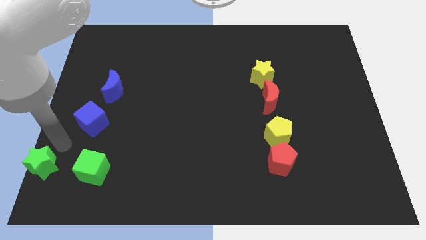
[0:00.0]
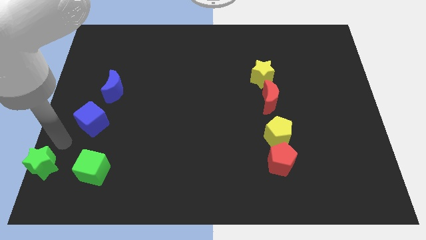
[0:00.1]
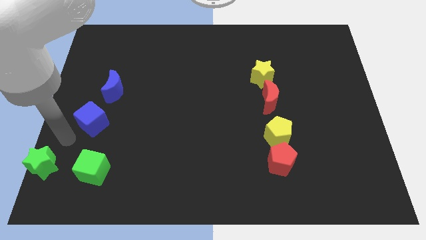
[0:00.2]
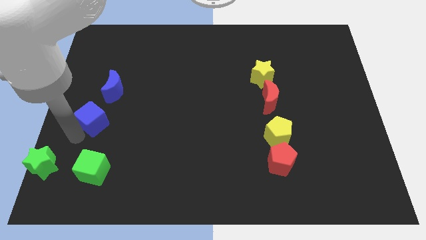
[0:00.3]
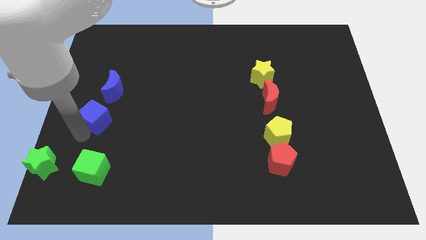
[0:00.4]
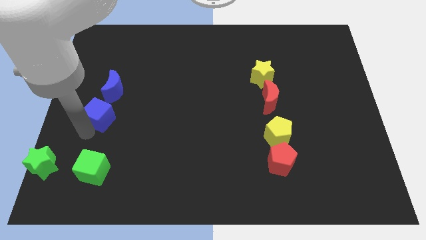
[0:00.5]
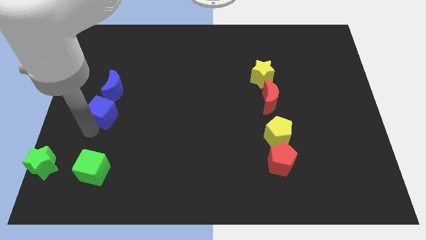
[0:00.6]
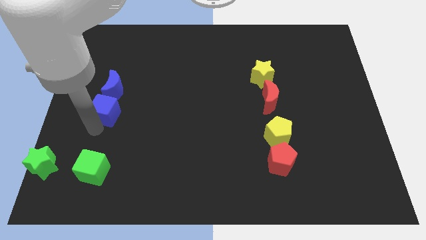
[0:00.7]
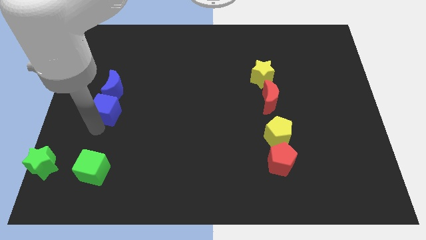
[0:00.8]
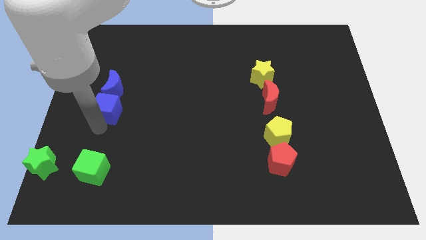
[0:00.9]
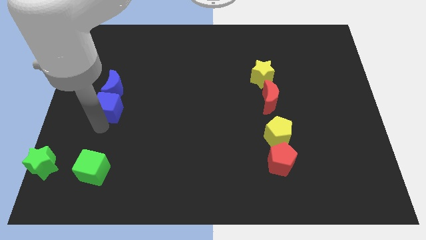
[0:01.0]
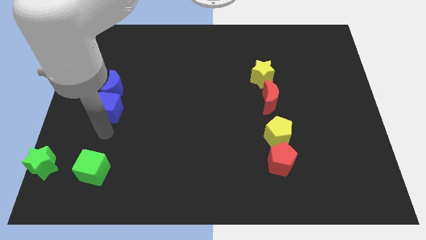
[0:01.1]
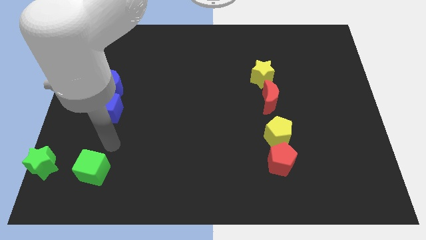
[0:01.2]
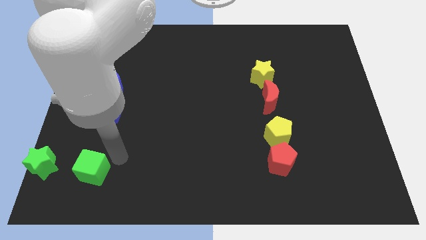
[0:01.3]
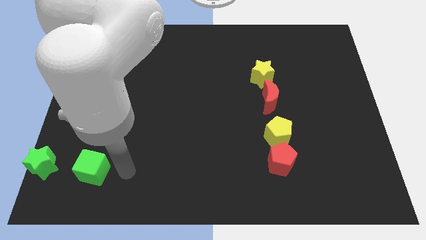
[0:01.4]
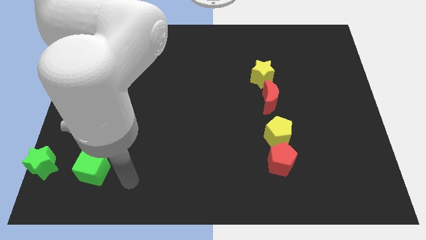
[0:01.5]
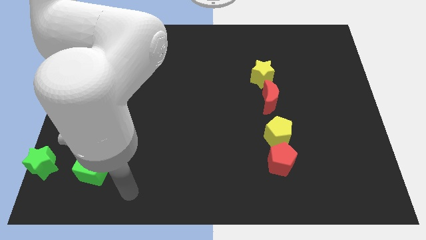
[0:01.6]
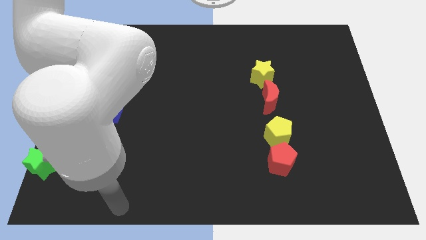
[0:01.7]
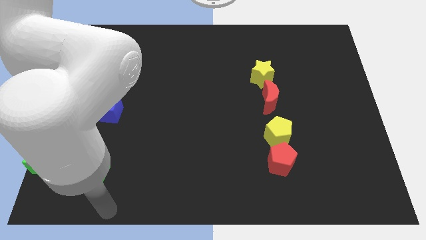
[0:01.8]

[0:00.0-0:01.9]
place the blue cube to the bottom of blue crescent

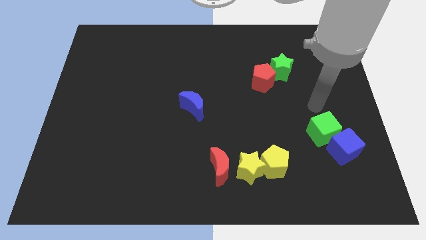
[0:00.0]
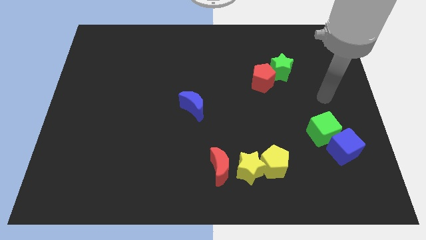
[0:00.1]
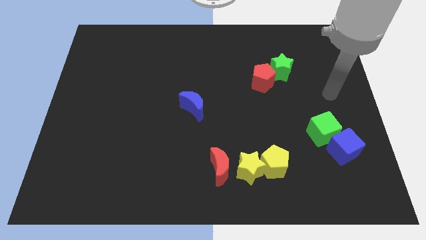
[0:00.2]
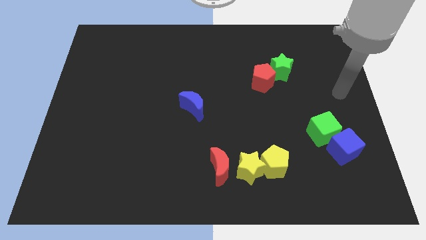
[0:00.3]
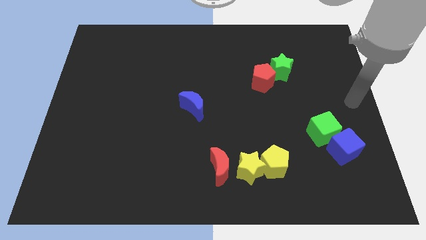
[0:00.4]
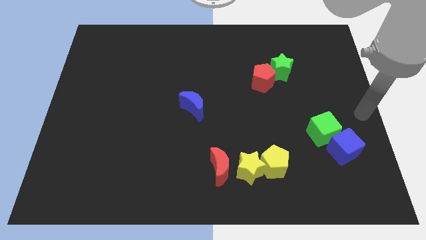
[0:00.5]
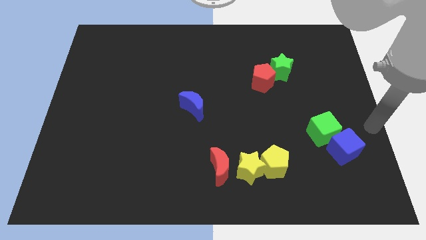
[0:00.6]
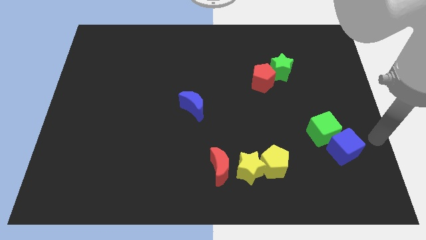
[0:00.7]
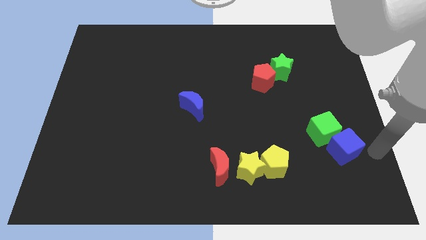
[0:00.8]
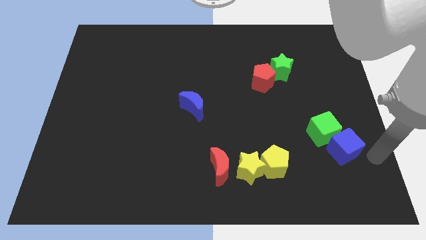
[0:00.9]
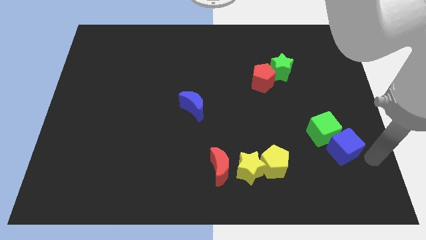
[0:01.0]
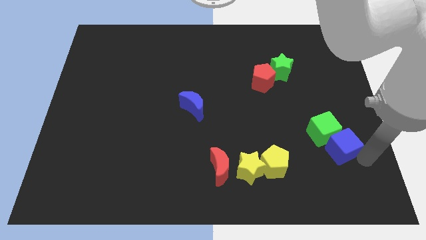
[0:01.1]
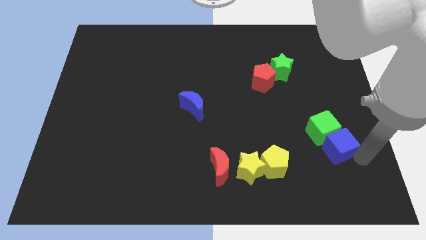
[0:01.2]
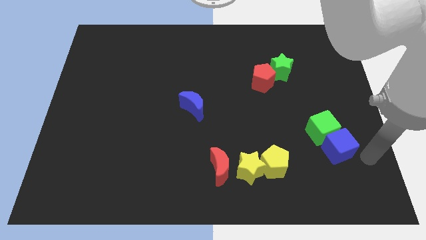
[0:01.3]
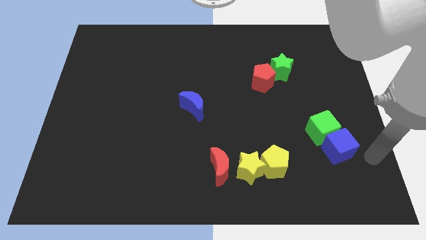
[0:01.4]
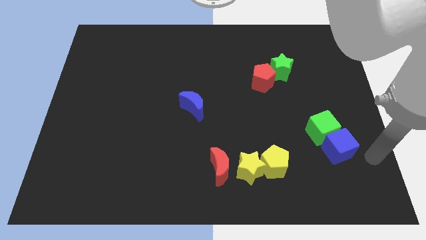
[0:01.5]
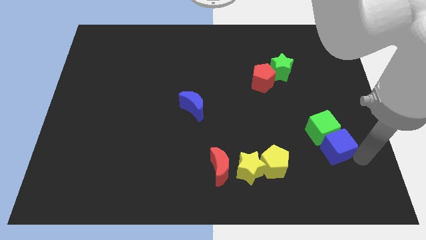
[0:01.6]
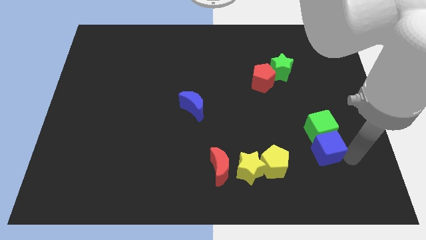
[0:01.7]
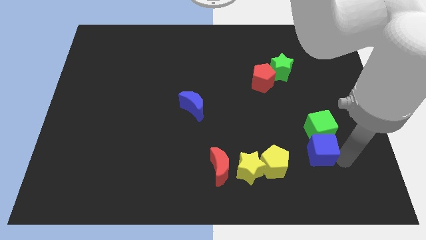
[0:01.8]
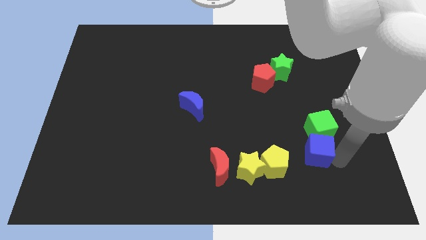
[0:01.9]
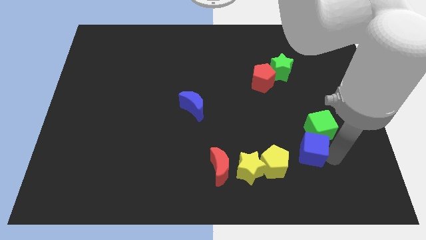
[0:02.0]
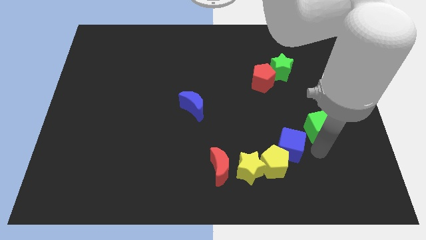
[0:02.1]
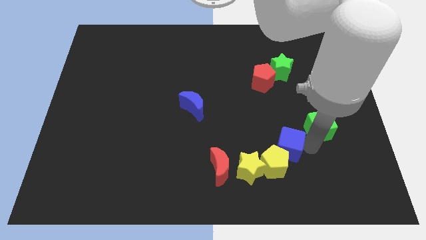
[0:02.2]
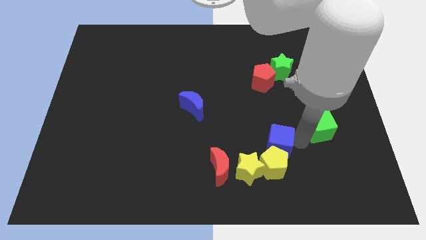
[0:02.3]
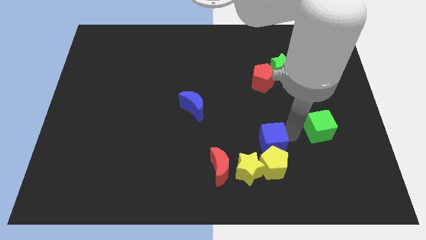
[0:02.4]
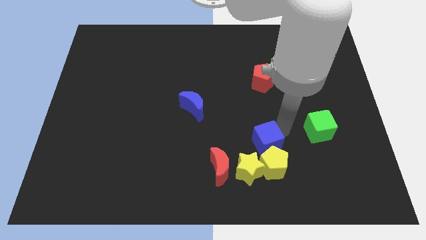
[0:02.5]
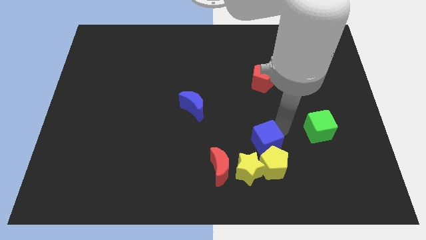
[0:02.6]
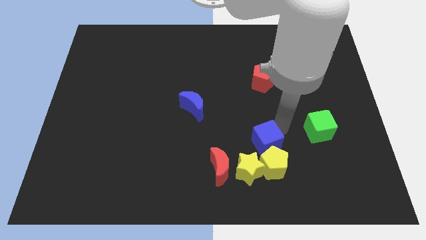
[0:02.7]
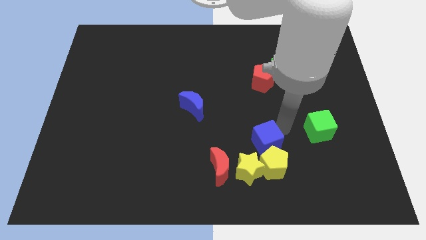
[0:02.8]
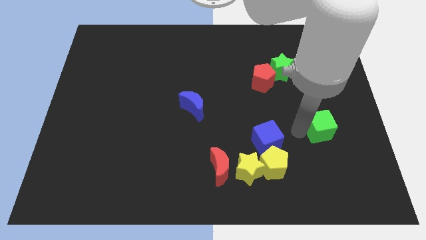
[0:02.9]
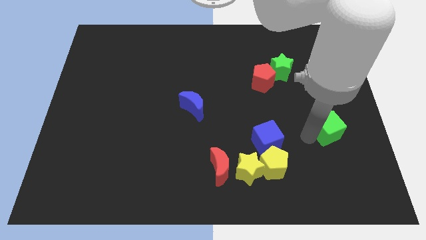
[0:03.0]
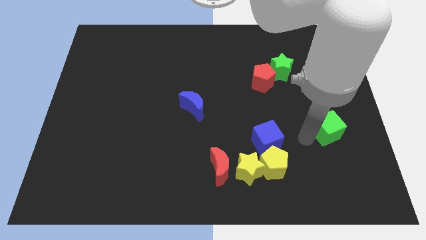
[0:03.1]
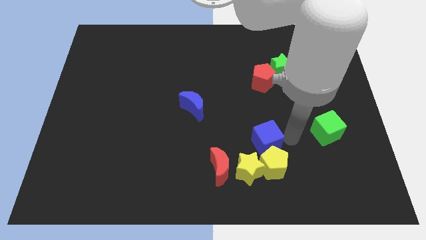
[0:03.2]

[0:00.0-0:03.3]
move the blue cube above yellow pentagon

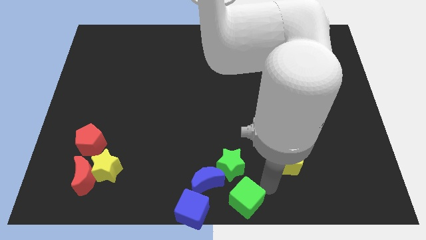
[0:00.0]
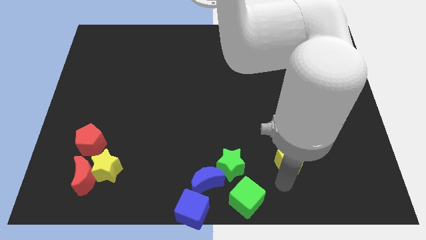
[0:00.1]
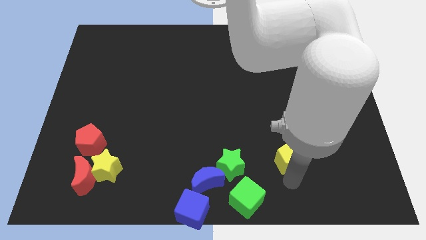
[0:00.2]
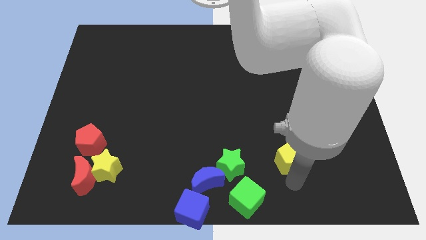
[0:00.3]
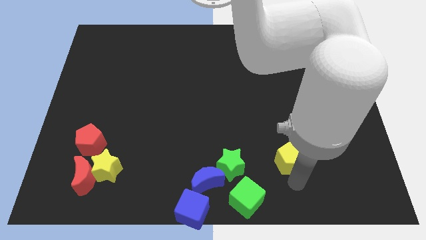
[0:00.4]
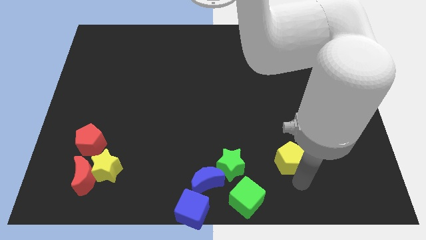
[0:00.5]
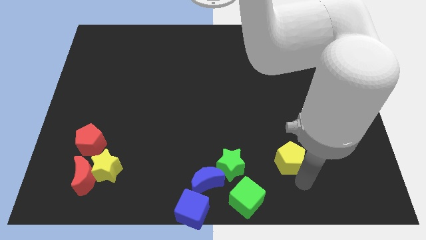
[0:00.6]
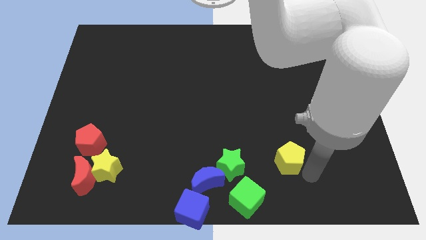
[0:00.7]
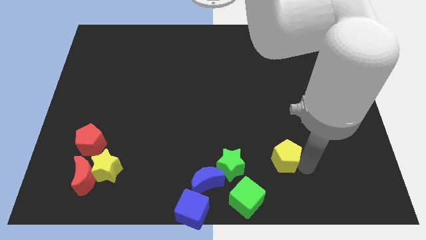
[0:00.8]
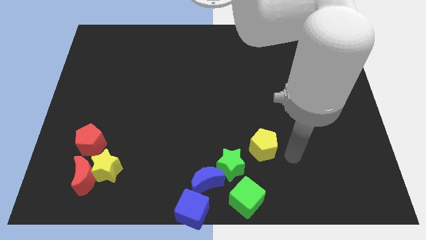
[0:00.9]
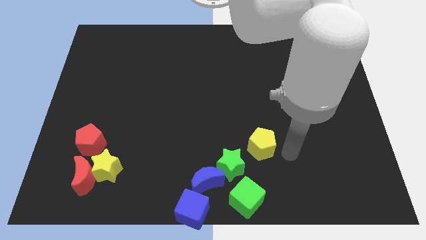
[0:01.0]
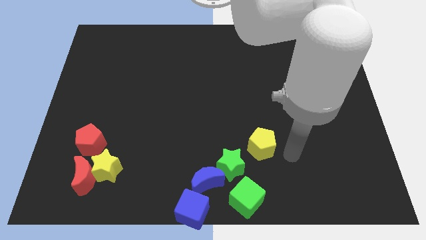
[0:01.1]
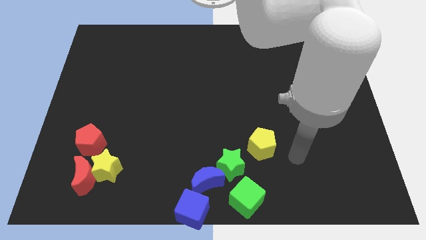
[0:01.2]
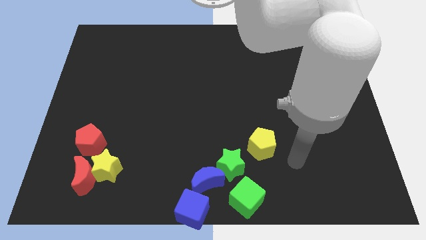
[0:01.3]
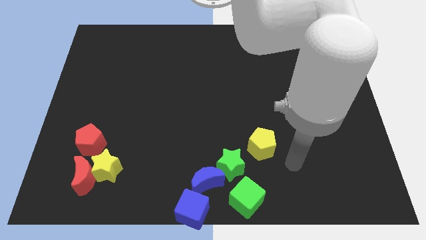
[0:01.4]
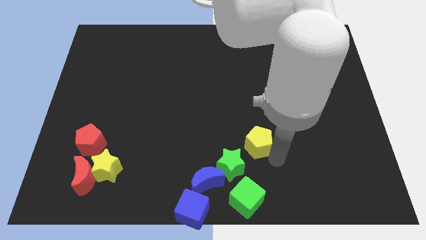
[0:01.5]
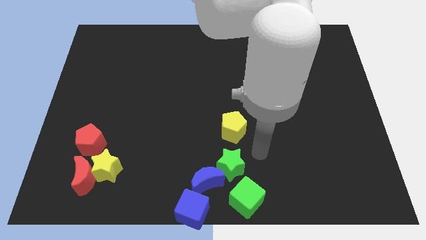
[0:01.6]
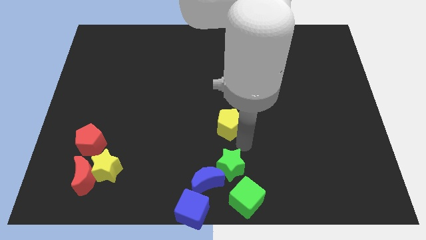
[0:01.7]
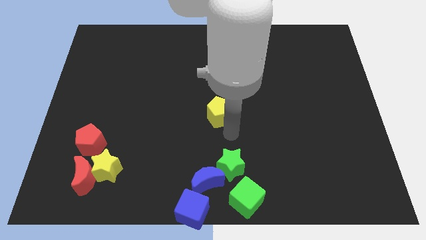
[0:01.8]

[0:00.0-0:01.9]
push the yellow pentagon to the top of the green star

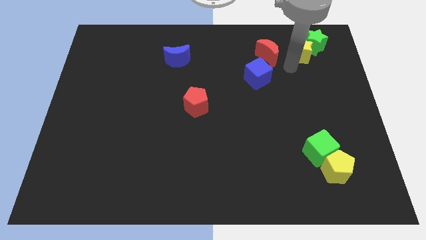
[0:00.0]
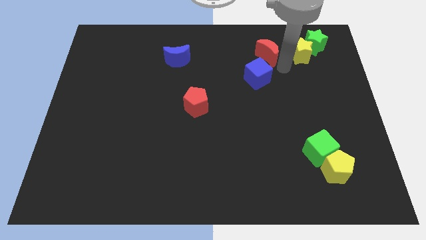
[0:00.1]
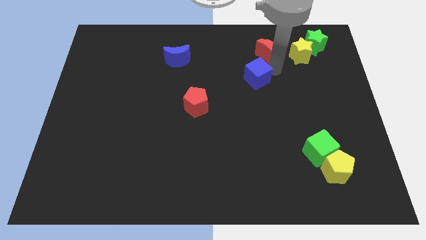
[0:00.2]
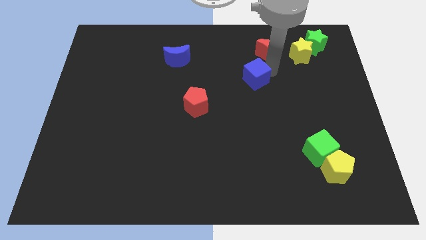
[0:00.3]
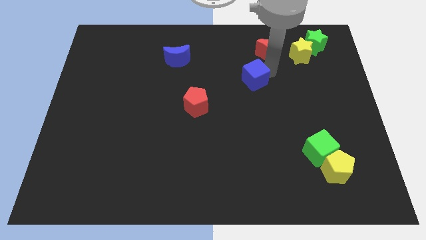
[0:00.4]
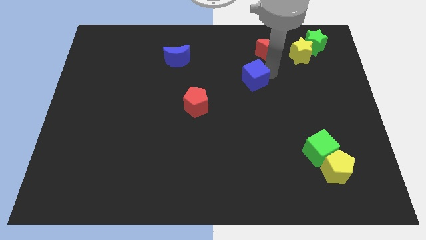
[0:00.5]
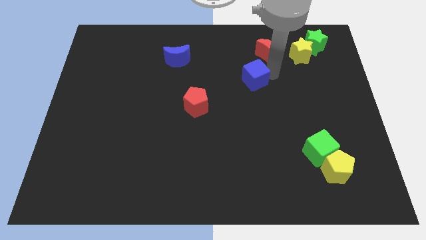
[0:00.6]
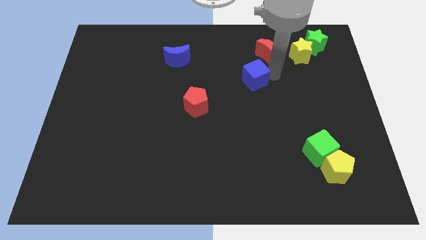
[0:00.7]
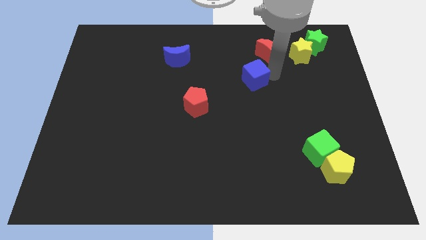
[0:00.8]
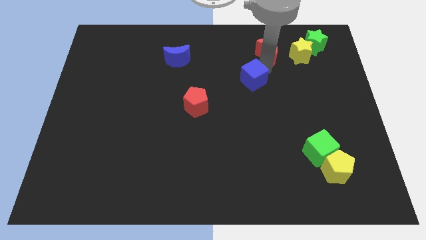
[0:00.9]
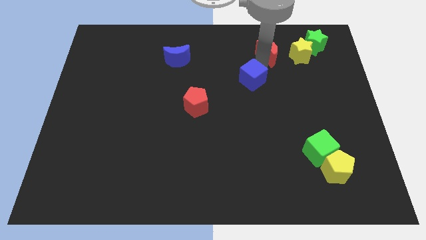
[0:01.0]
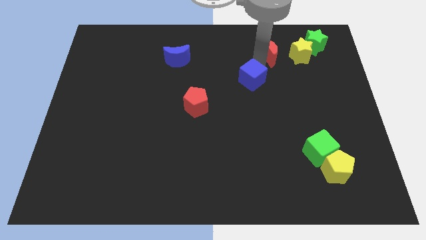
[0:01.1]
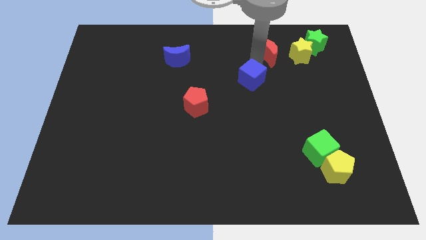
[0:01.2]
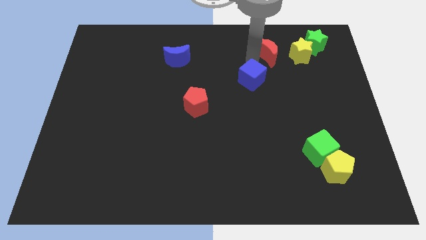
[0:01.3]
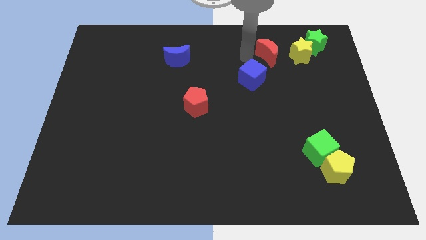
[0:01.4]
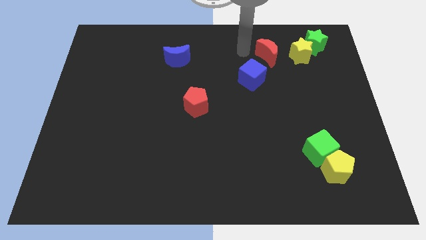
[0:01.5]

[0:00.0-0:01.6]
move the blue cube slightly down

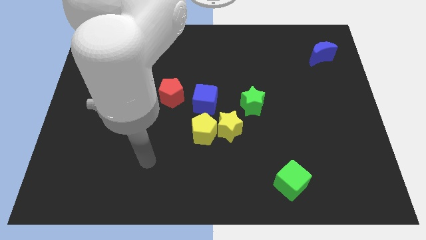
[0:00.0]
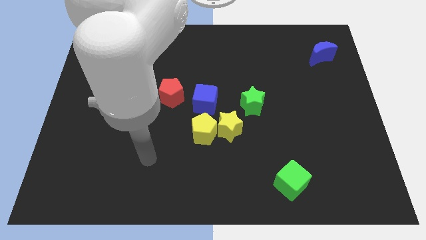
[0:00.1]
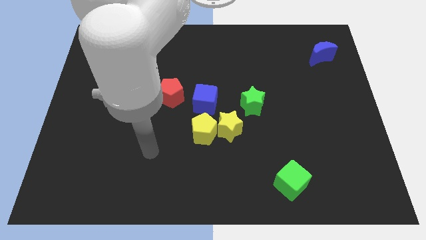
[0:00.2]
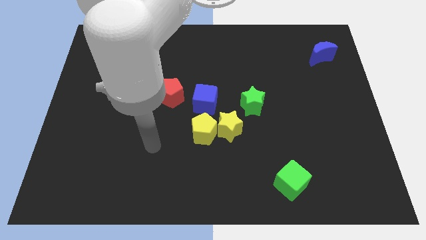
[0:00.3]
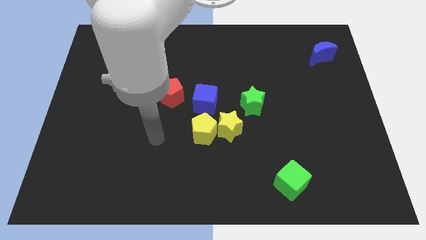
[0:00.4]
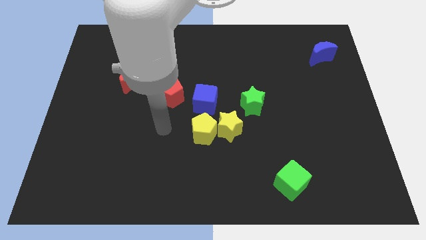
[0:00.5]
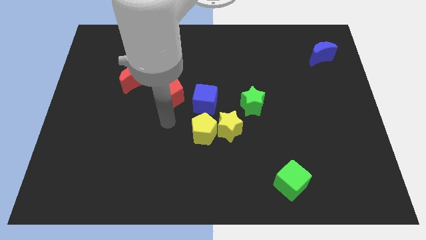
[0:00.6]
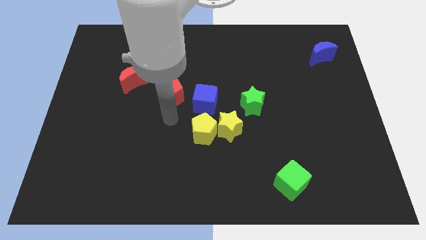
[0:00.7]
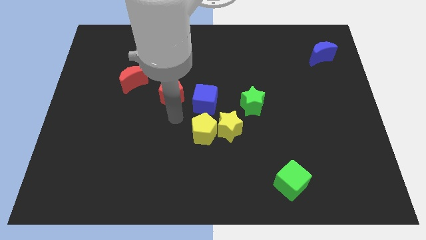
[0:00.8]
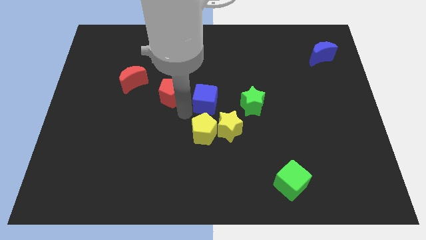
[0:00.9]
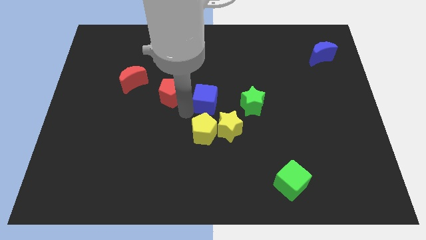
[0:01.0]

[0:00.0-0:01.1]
move your arm towards the blue cube
